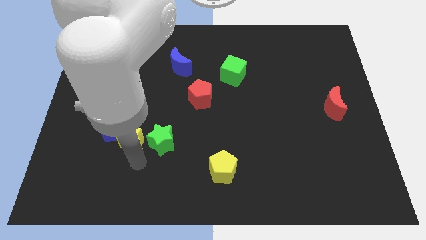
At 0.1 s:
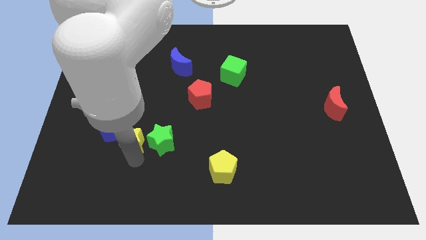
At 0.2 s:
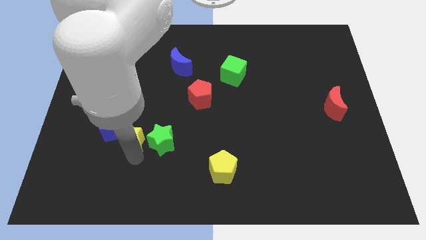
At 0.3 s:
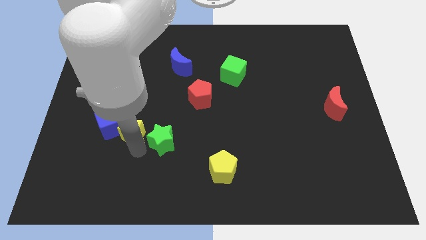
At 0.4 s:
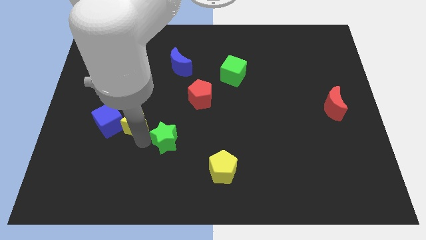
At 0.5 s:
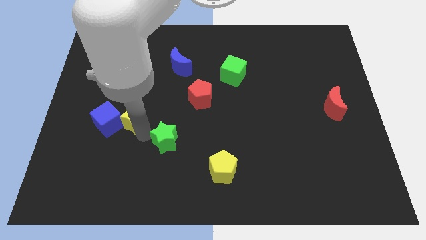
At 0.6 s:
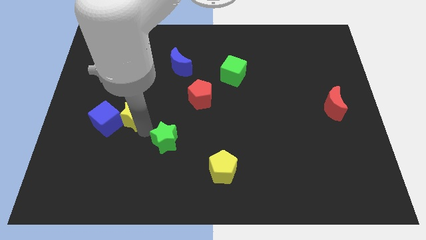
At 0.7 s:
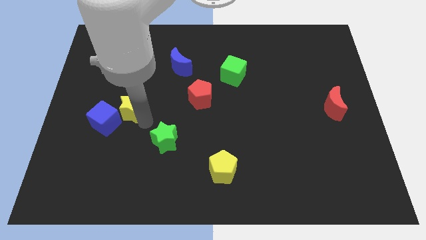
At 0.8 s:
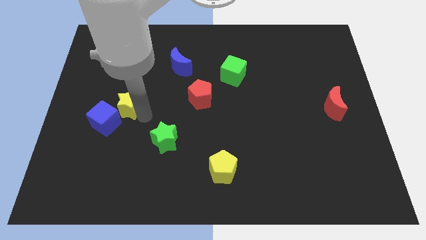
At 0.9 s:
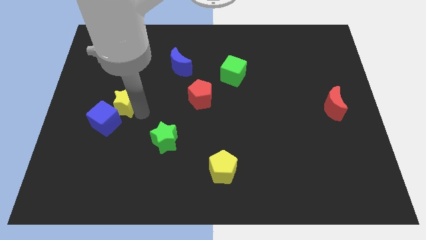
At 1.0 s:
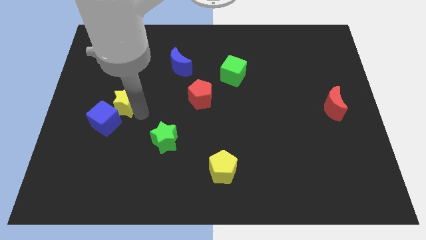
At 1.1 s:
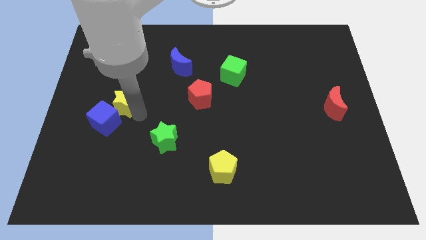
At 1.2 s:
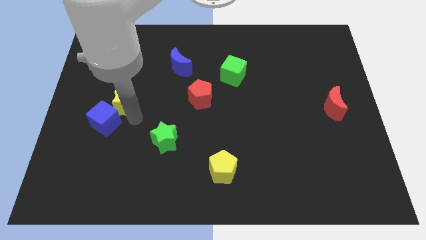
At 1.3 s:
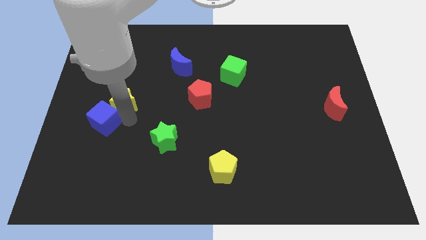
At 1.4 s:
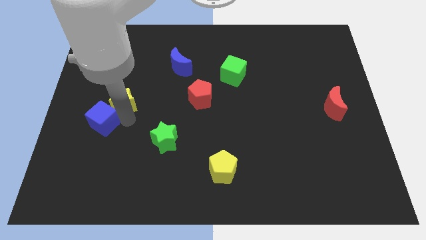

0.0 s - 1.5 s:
push the yellow star slightly to the left center of the board

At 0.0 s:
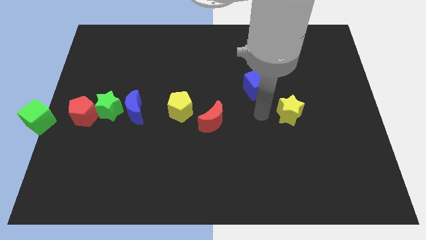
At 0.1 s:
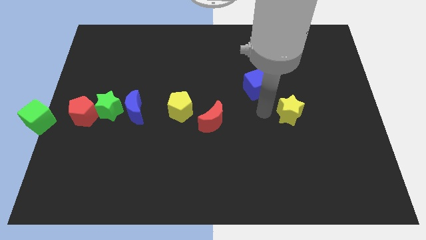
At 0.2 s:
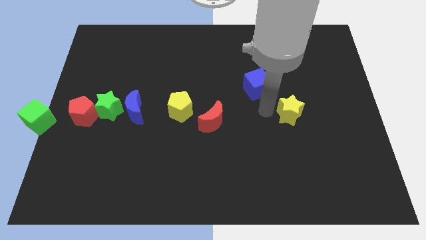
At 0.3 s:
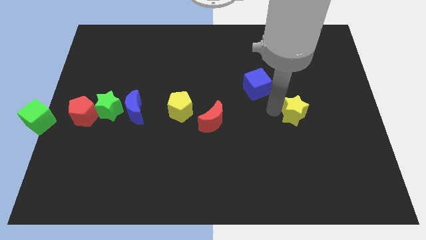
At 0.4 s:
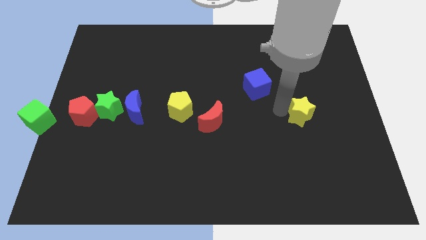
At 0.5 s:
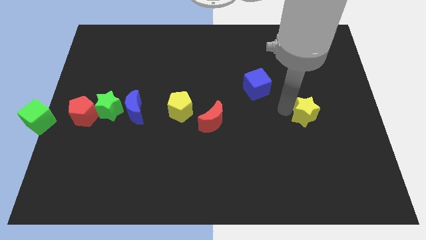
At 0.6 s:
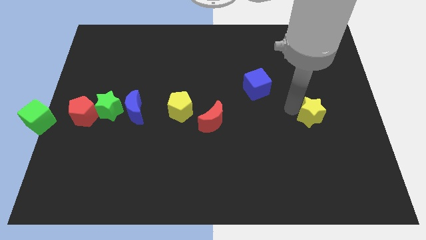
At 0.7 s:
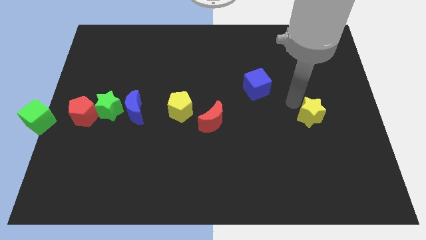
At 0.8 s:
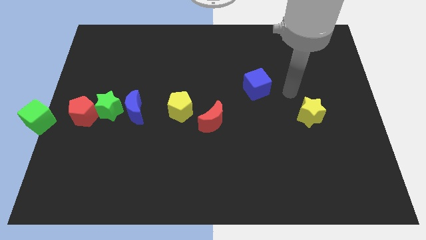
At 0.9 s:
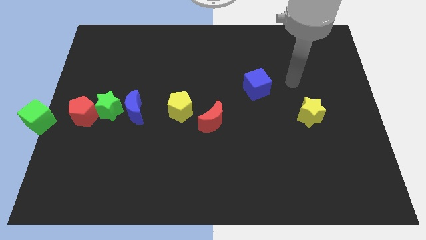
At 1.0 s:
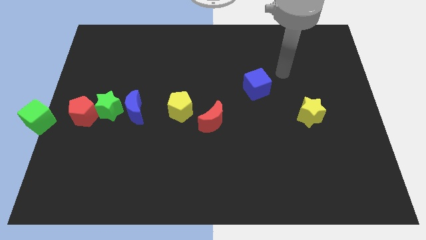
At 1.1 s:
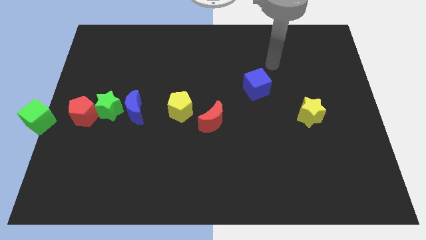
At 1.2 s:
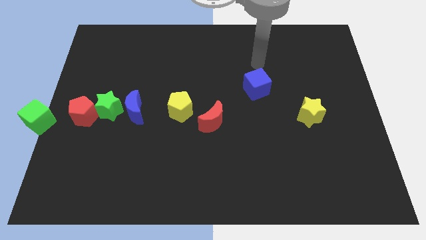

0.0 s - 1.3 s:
move the yellow star to the right center of the board

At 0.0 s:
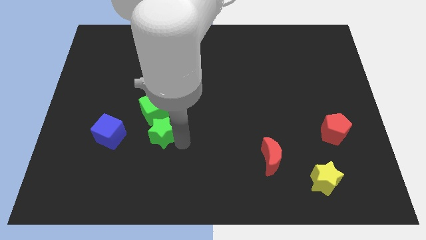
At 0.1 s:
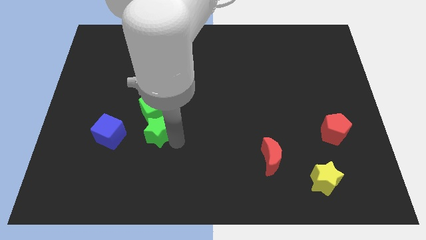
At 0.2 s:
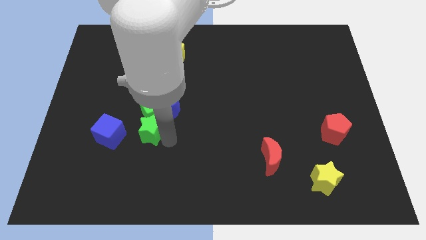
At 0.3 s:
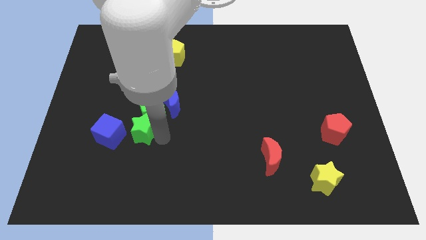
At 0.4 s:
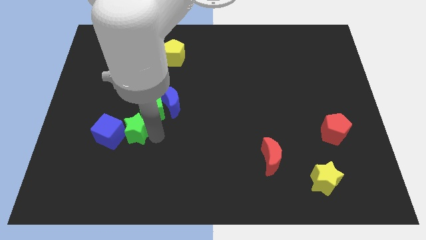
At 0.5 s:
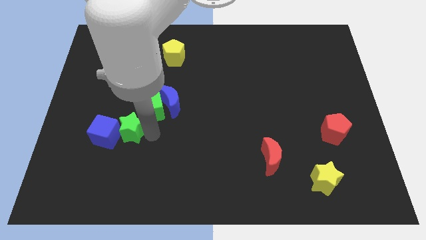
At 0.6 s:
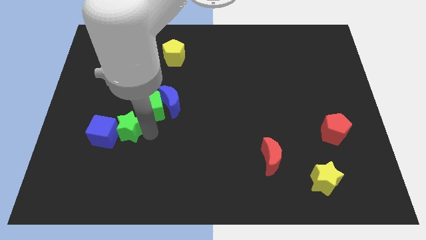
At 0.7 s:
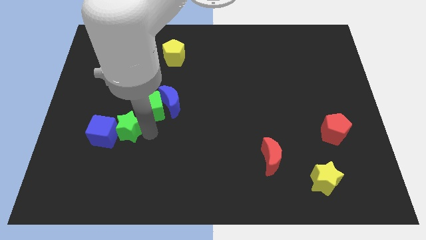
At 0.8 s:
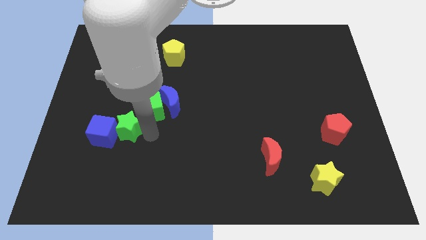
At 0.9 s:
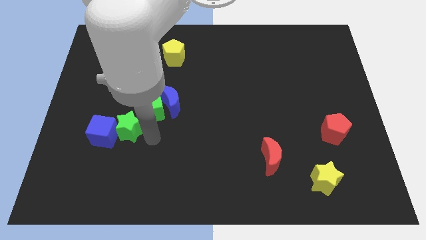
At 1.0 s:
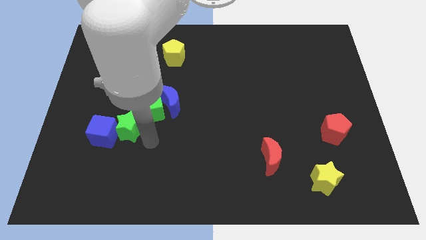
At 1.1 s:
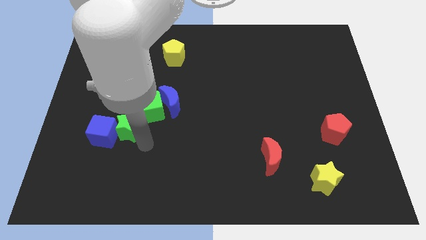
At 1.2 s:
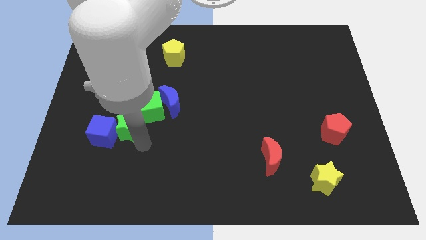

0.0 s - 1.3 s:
move the green star into the blue cube

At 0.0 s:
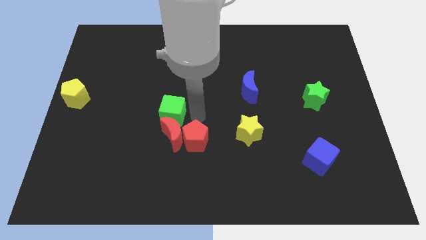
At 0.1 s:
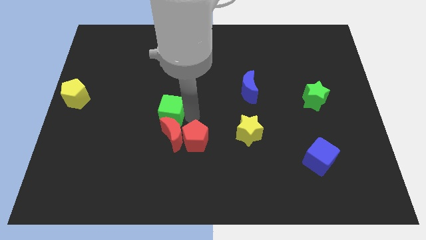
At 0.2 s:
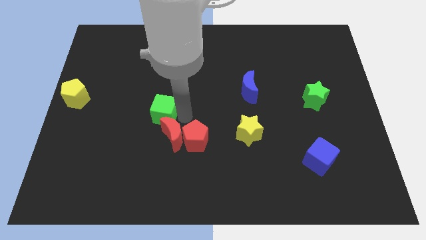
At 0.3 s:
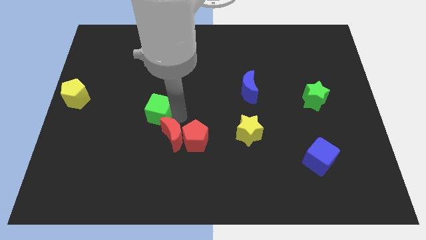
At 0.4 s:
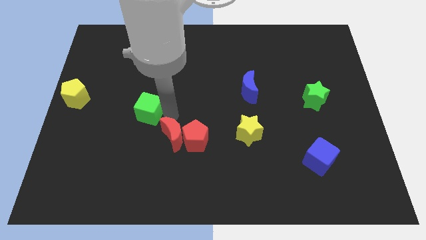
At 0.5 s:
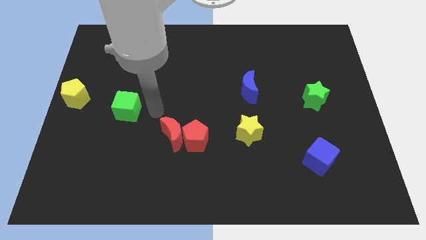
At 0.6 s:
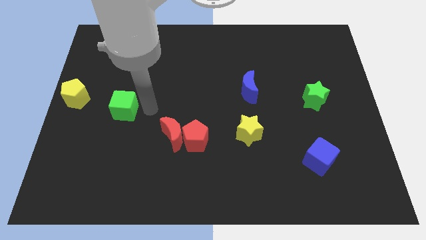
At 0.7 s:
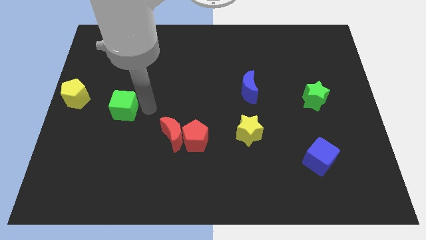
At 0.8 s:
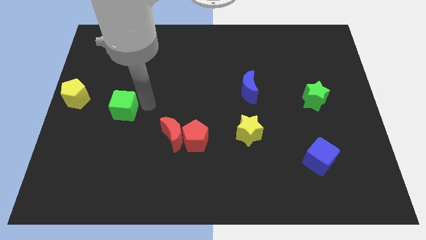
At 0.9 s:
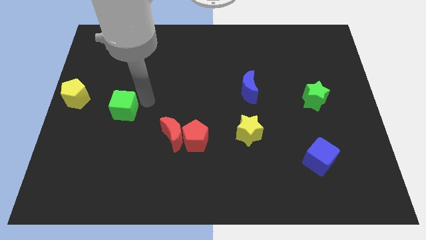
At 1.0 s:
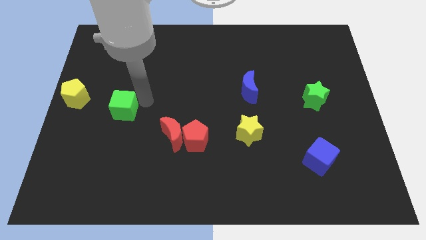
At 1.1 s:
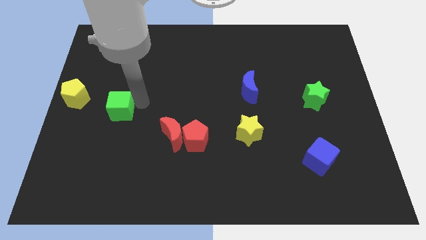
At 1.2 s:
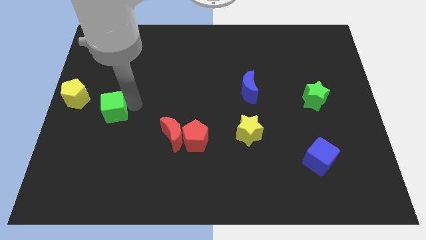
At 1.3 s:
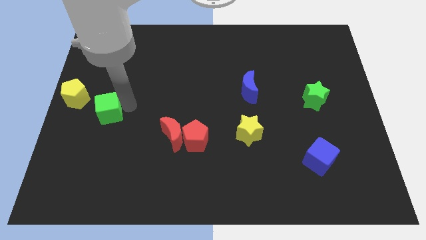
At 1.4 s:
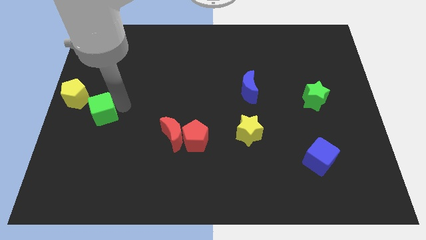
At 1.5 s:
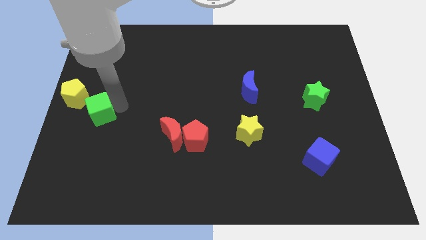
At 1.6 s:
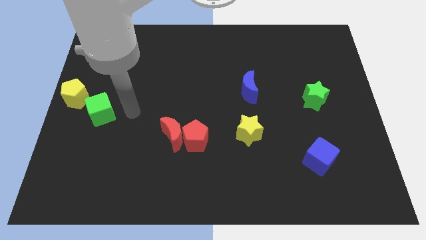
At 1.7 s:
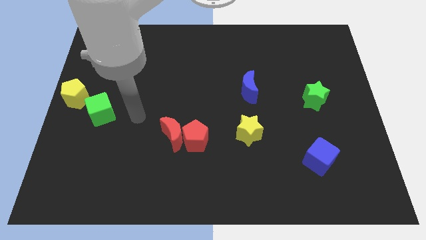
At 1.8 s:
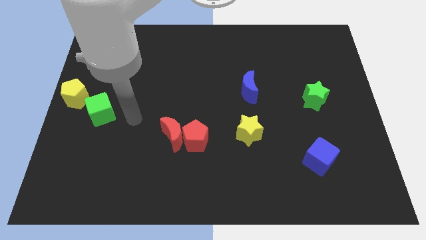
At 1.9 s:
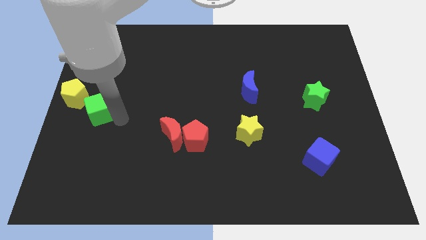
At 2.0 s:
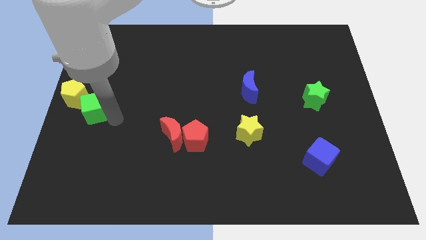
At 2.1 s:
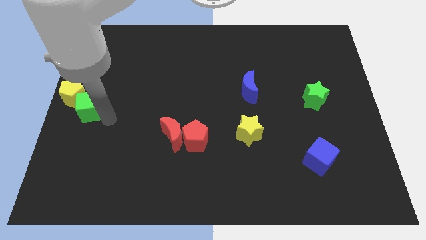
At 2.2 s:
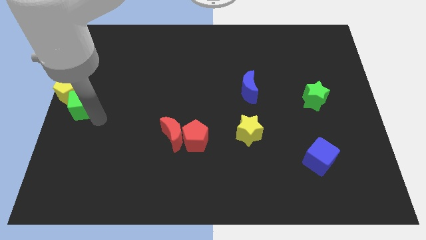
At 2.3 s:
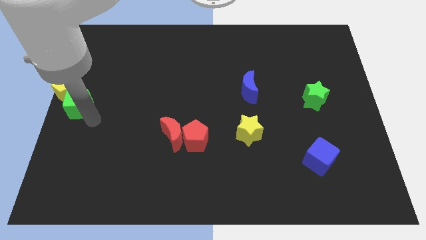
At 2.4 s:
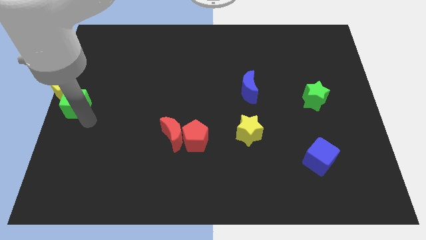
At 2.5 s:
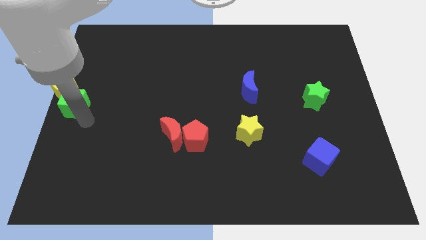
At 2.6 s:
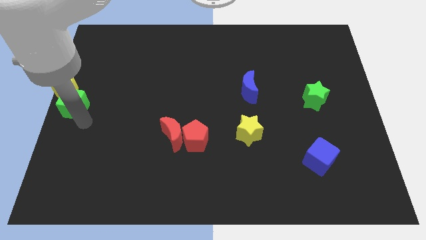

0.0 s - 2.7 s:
move green cube into the yellow pentagon

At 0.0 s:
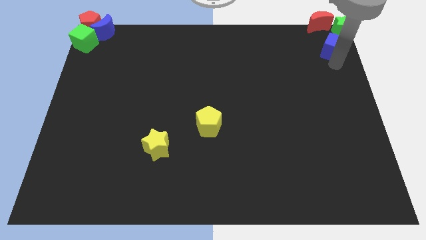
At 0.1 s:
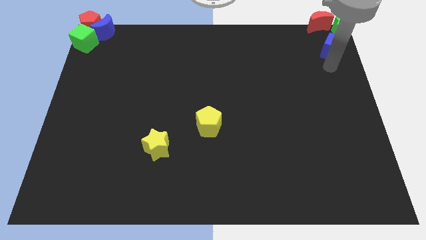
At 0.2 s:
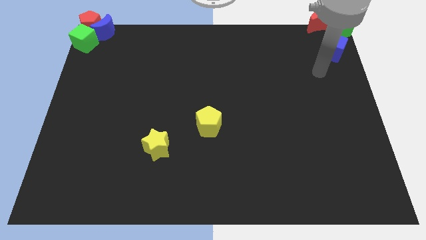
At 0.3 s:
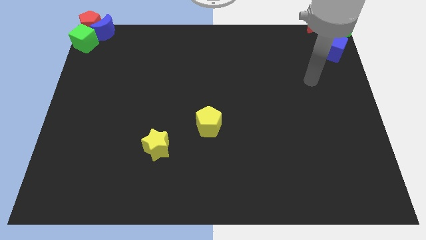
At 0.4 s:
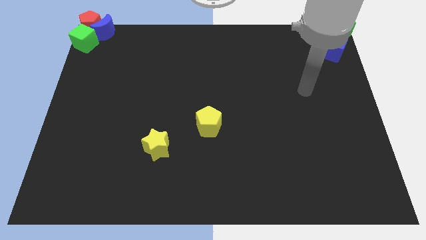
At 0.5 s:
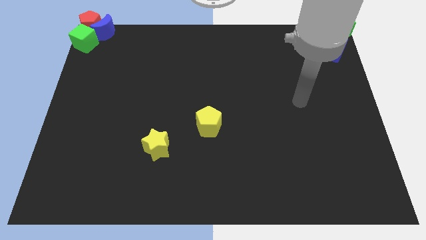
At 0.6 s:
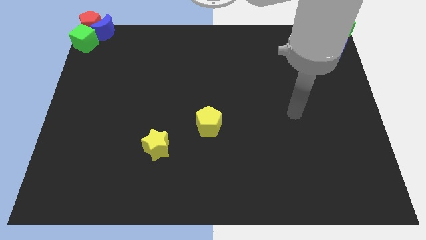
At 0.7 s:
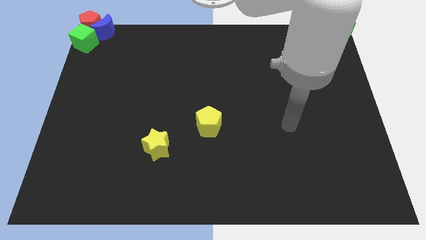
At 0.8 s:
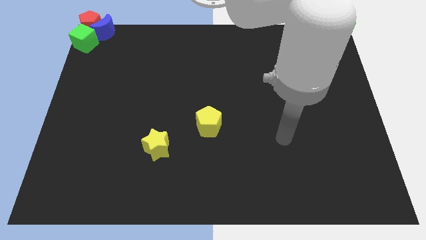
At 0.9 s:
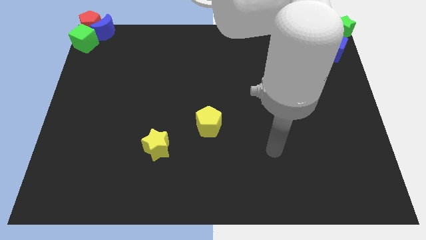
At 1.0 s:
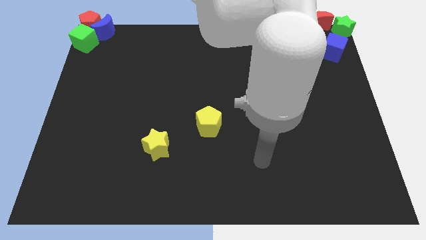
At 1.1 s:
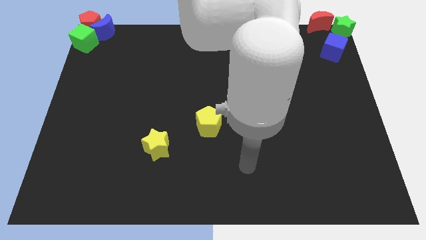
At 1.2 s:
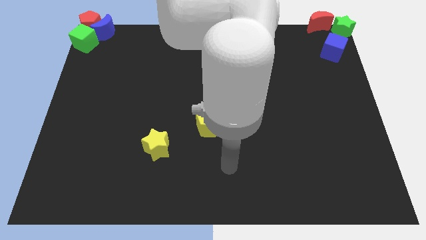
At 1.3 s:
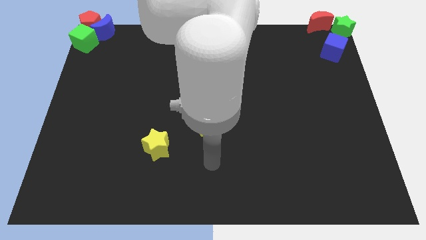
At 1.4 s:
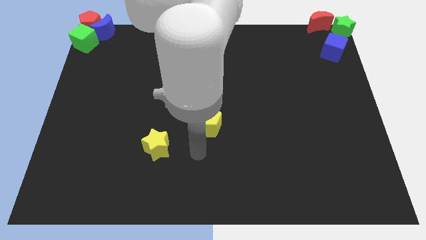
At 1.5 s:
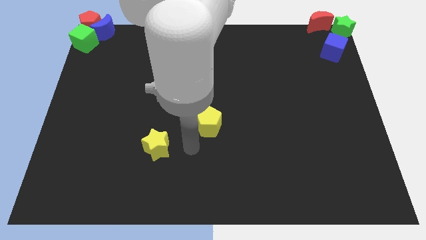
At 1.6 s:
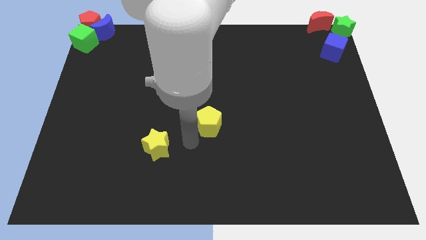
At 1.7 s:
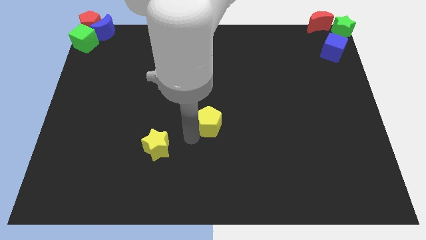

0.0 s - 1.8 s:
move the hand at the bottom left to the yellow pentagon

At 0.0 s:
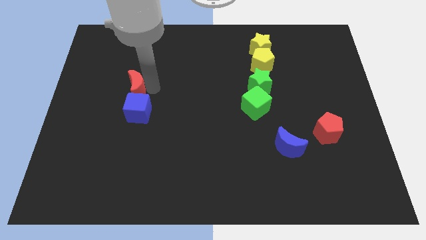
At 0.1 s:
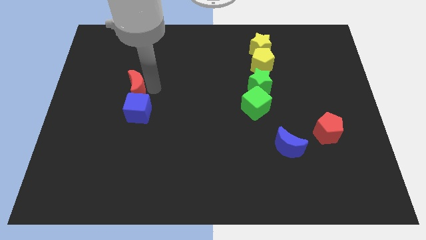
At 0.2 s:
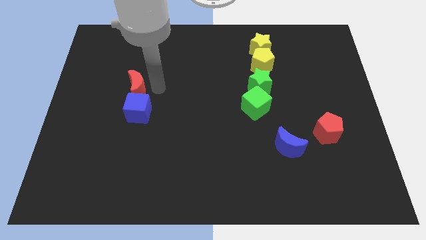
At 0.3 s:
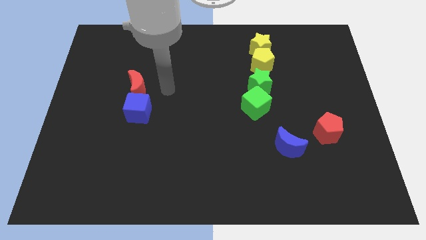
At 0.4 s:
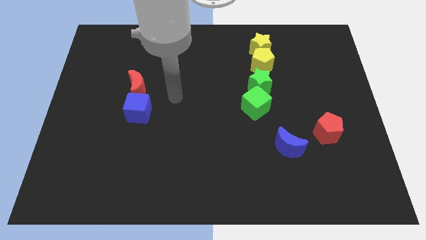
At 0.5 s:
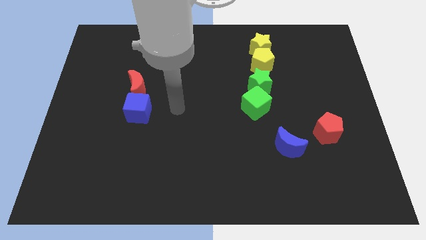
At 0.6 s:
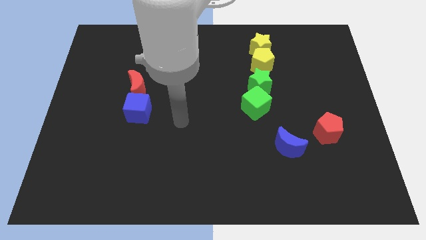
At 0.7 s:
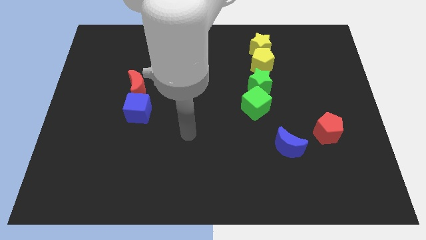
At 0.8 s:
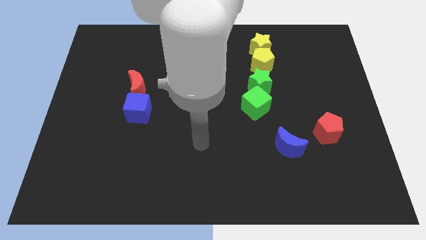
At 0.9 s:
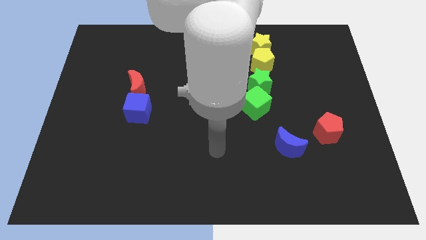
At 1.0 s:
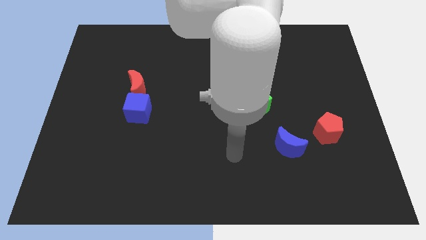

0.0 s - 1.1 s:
move your arm away from red moon
